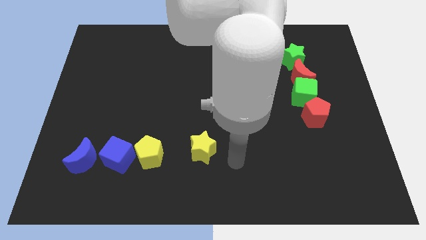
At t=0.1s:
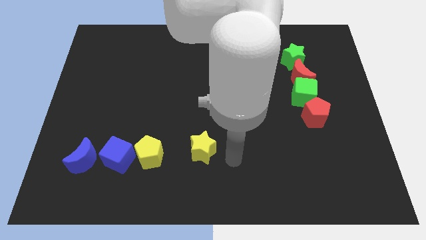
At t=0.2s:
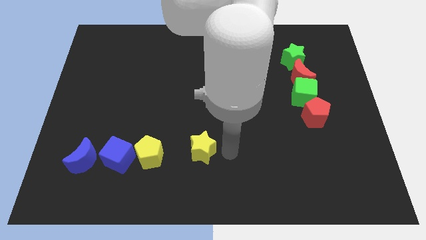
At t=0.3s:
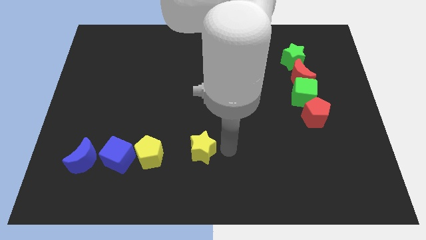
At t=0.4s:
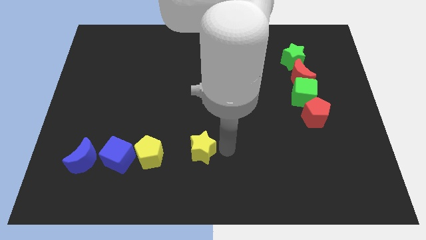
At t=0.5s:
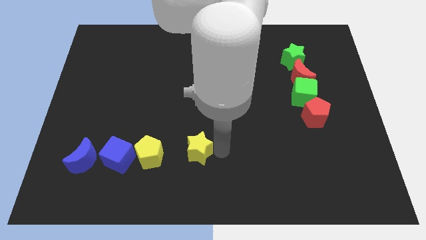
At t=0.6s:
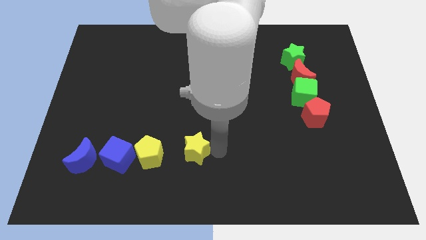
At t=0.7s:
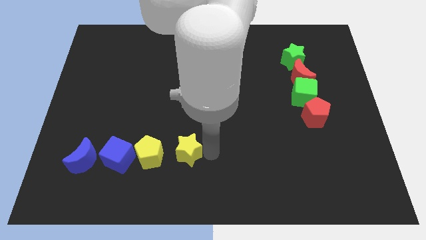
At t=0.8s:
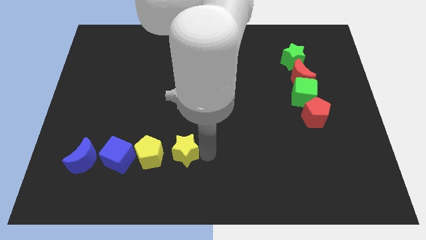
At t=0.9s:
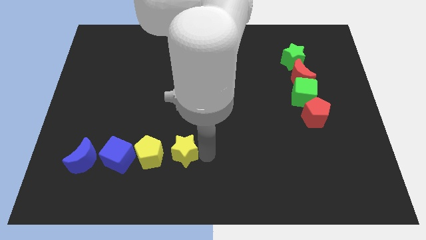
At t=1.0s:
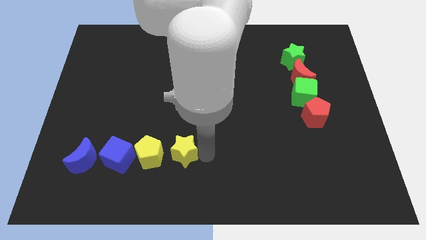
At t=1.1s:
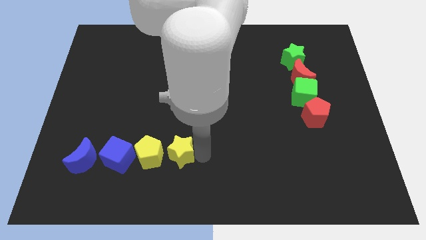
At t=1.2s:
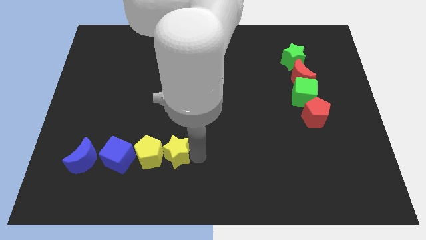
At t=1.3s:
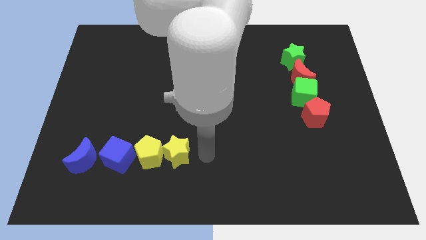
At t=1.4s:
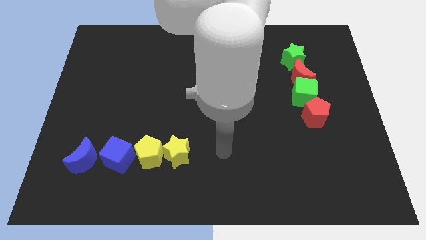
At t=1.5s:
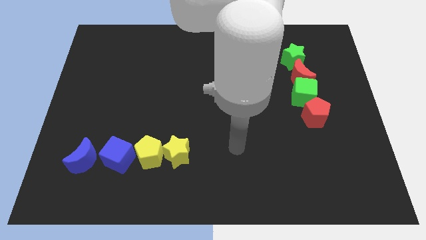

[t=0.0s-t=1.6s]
push the yellow star into the yellow pentagon

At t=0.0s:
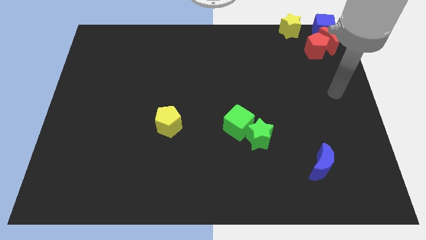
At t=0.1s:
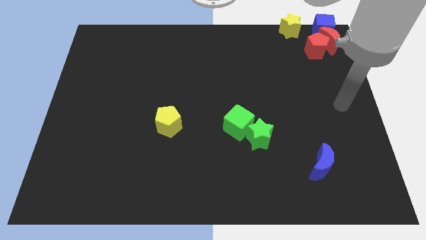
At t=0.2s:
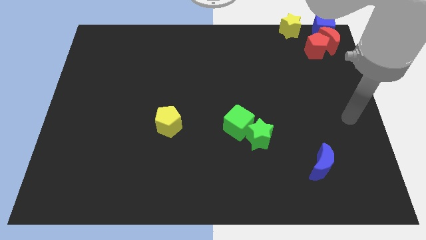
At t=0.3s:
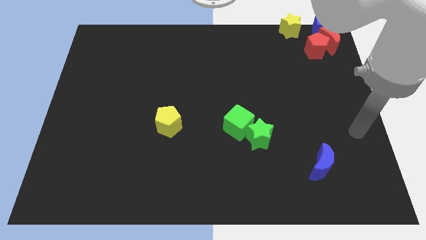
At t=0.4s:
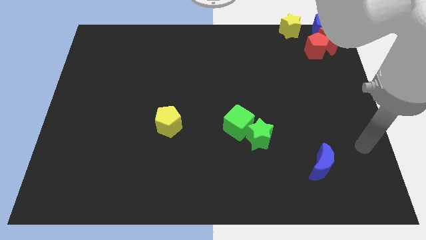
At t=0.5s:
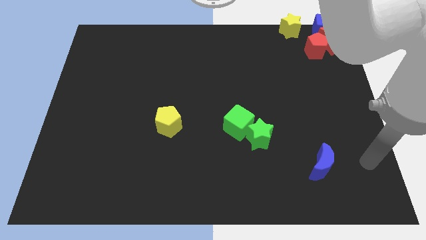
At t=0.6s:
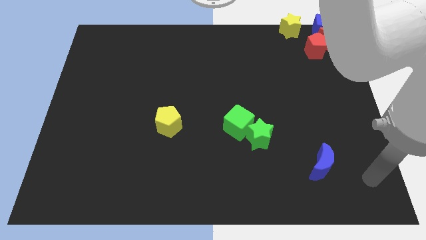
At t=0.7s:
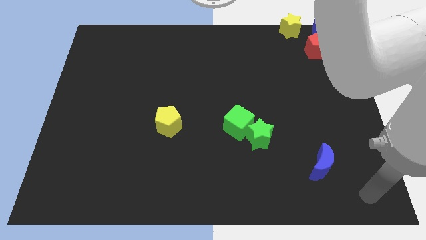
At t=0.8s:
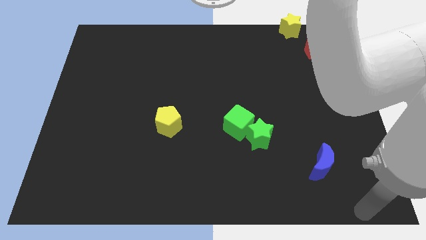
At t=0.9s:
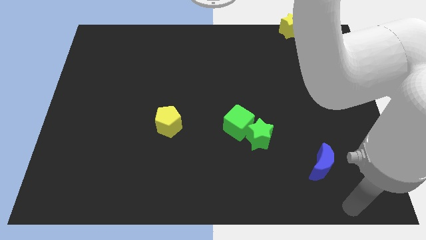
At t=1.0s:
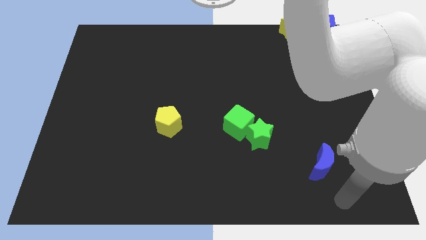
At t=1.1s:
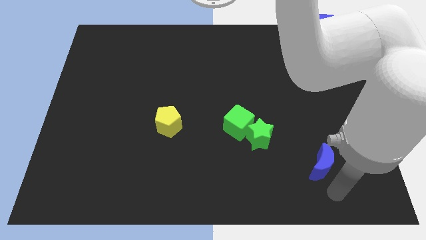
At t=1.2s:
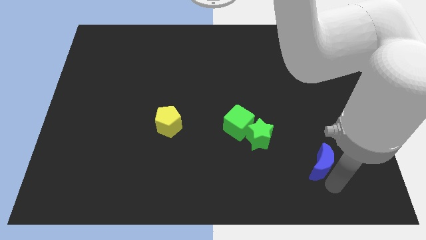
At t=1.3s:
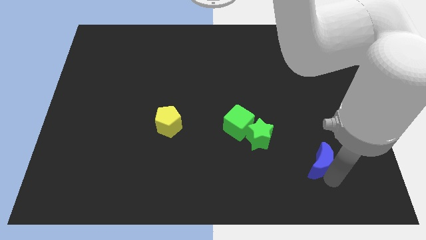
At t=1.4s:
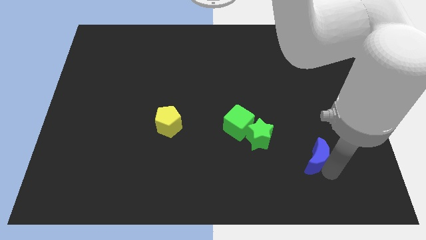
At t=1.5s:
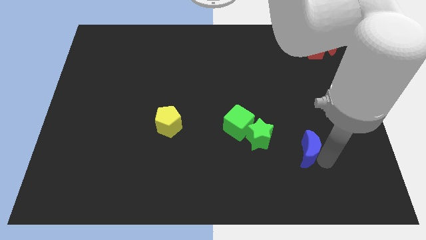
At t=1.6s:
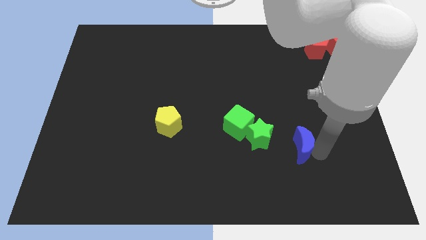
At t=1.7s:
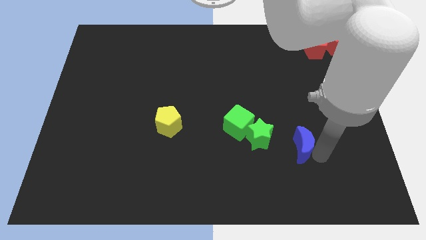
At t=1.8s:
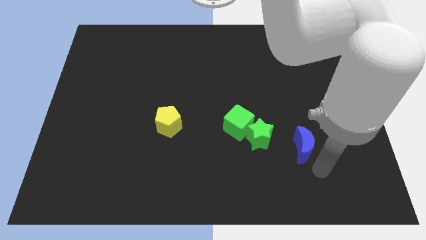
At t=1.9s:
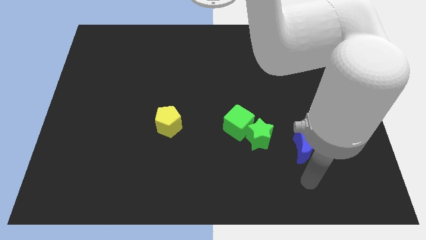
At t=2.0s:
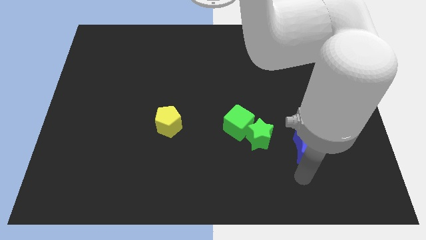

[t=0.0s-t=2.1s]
push the blue moon to the bottom right of green star

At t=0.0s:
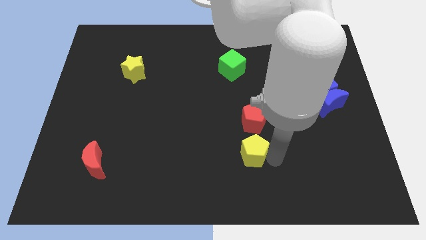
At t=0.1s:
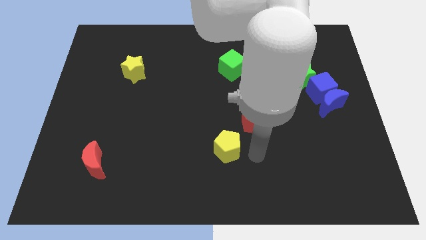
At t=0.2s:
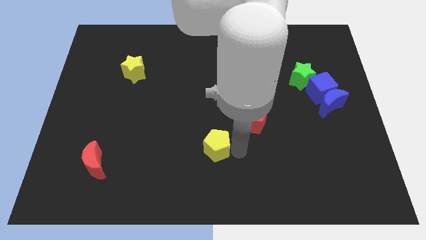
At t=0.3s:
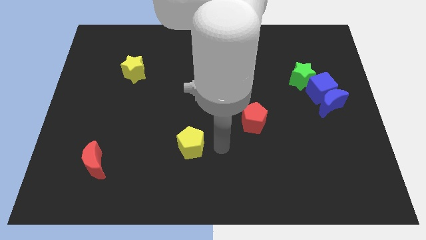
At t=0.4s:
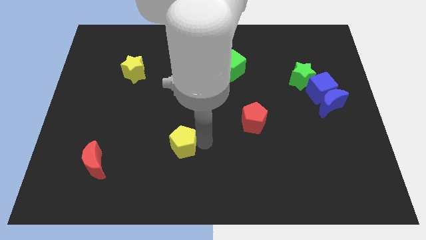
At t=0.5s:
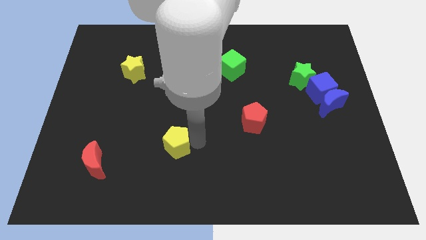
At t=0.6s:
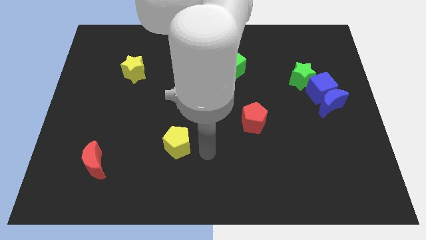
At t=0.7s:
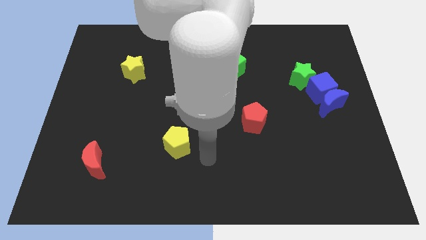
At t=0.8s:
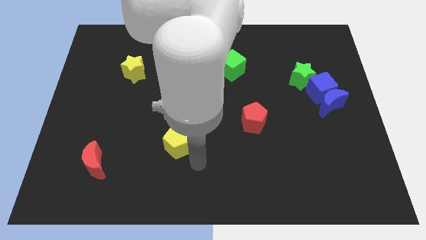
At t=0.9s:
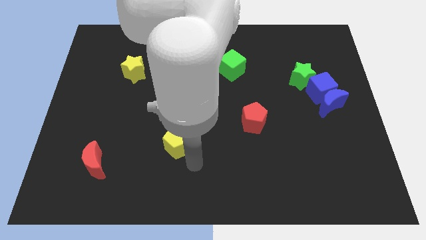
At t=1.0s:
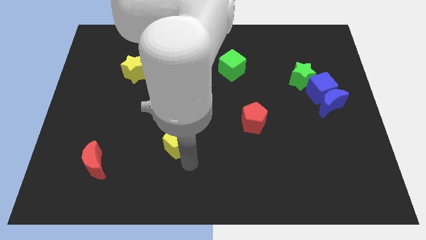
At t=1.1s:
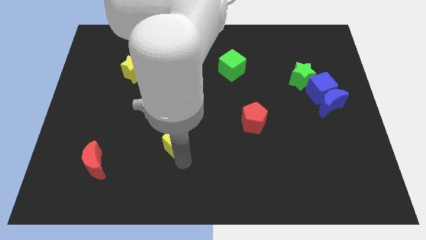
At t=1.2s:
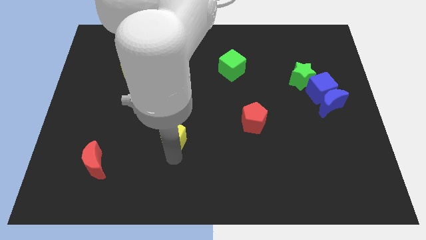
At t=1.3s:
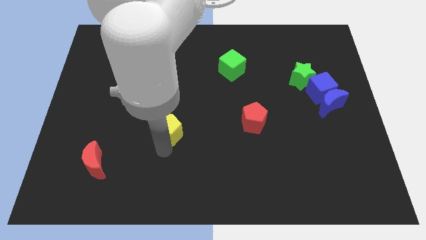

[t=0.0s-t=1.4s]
put the yellow pentagon diagonally in between the red blocks

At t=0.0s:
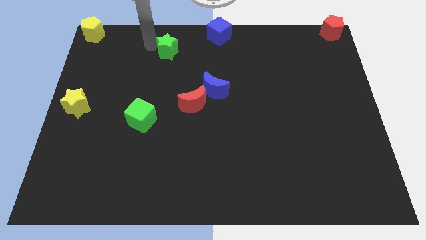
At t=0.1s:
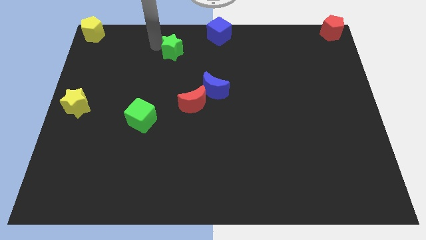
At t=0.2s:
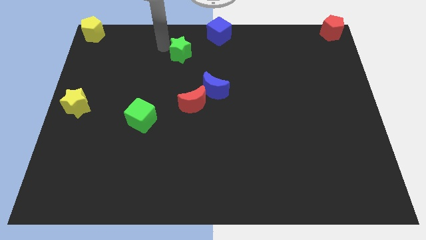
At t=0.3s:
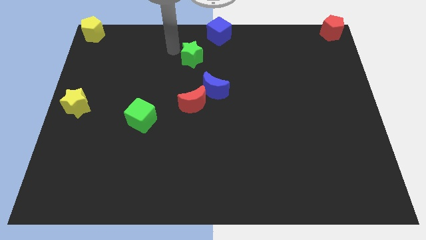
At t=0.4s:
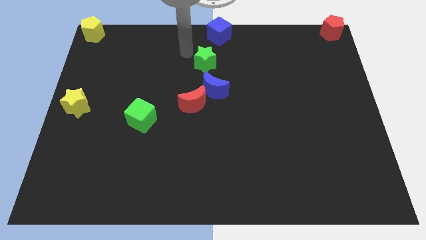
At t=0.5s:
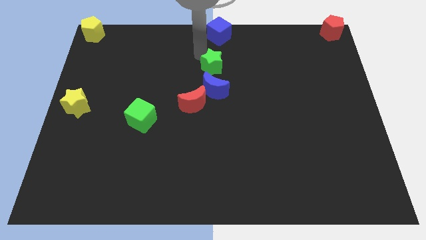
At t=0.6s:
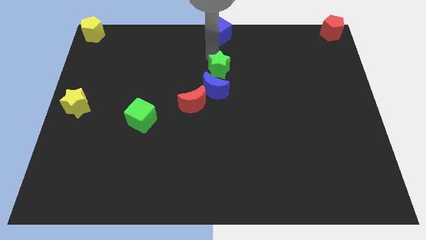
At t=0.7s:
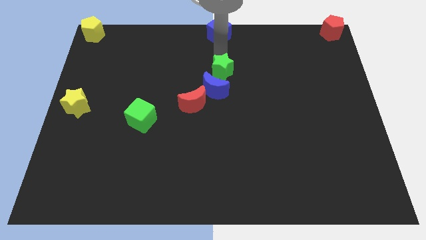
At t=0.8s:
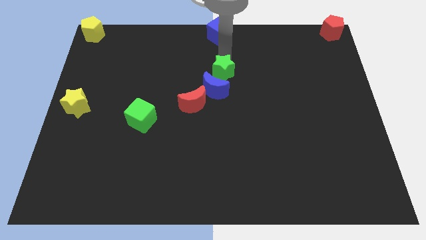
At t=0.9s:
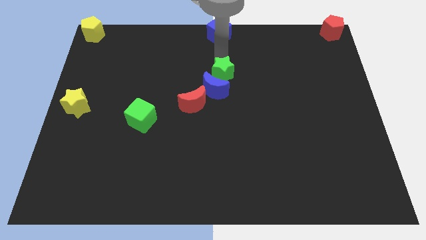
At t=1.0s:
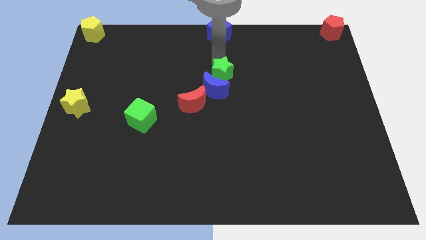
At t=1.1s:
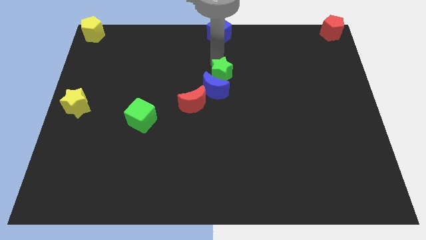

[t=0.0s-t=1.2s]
push the green star into the blue crescent from the top

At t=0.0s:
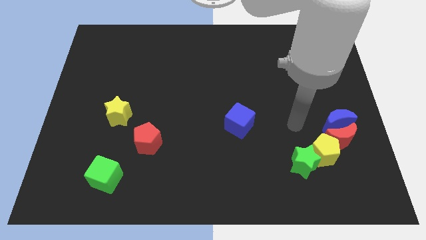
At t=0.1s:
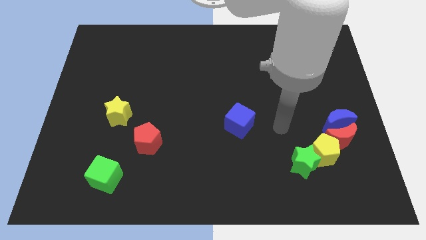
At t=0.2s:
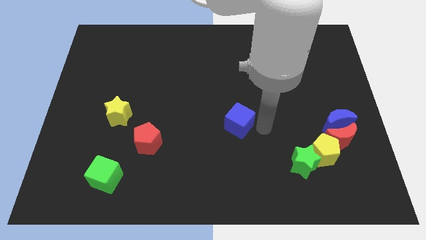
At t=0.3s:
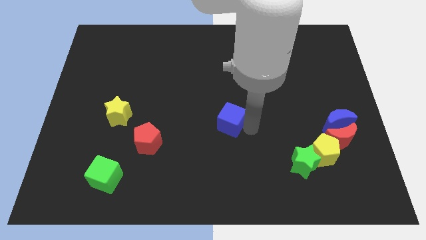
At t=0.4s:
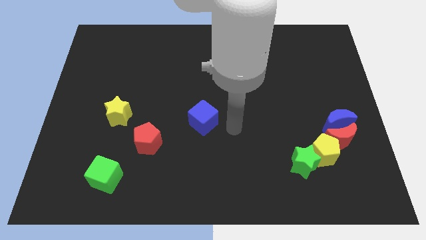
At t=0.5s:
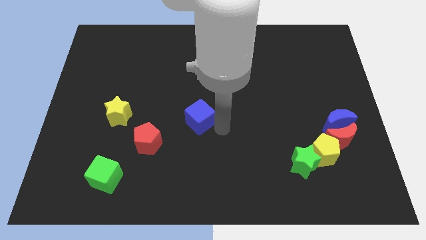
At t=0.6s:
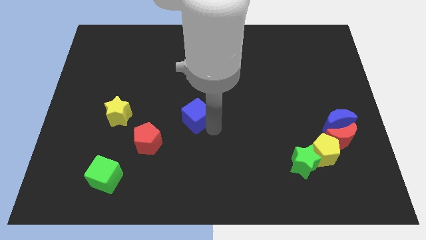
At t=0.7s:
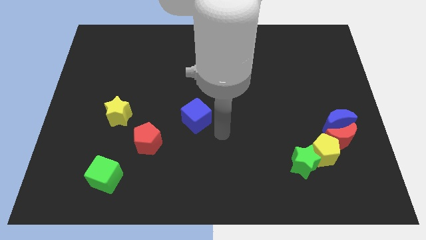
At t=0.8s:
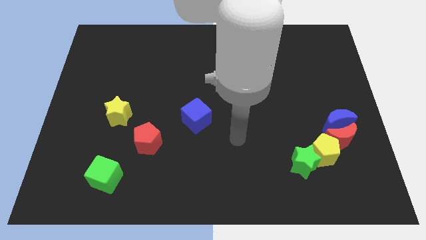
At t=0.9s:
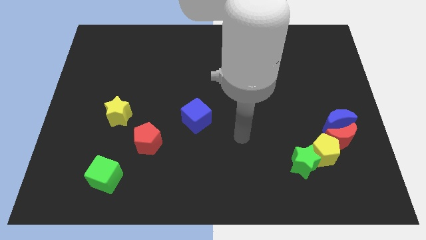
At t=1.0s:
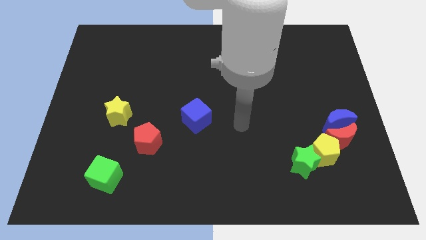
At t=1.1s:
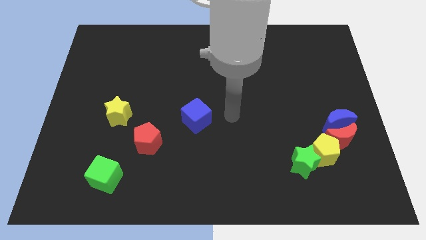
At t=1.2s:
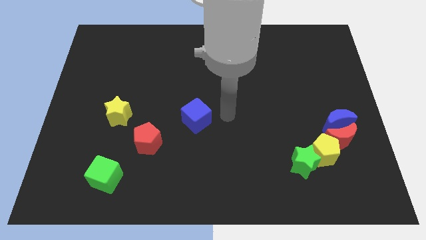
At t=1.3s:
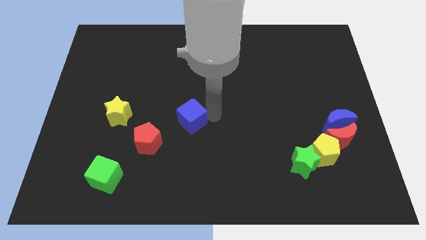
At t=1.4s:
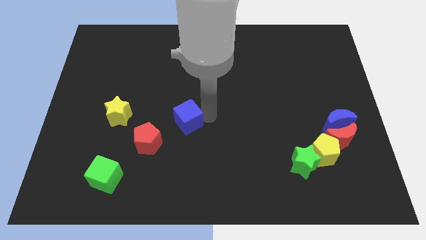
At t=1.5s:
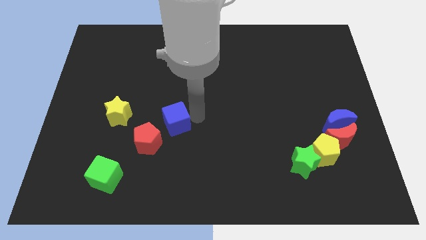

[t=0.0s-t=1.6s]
push the blue cube slightly towards the red pentagon

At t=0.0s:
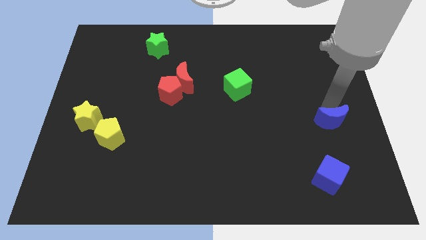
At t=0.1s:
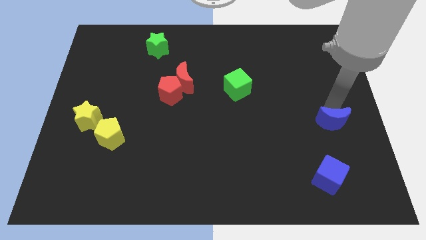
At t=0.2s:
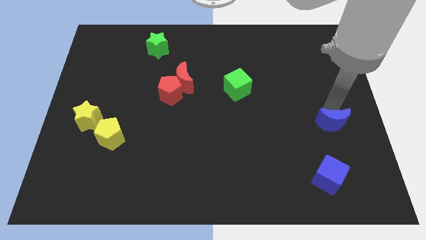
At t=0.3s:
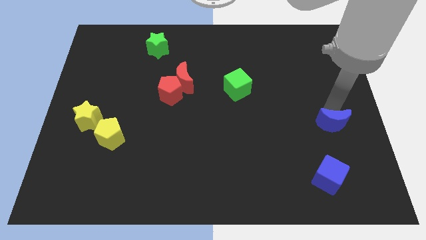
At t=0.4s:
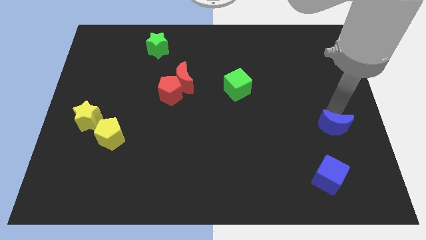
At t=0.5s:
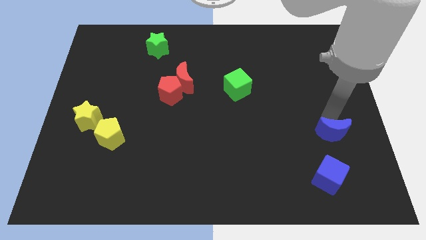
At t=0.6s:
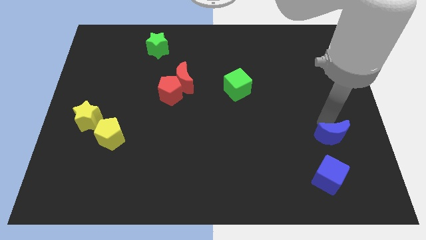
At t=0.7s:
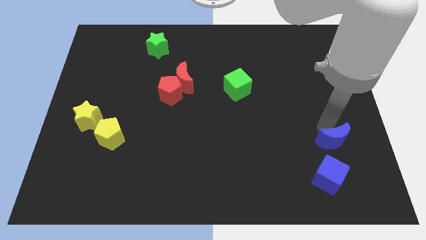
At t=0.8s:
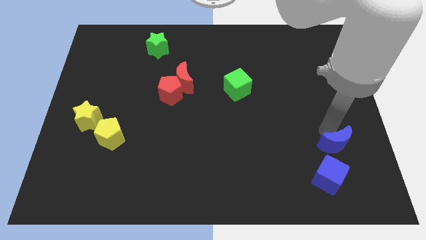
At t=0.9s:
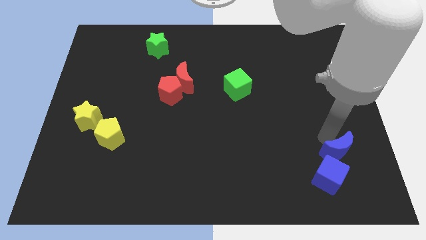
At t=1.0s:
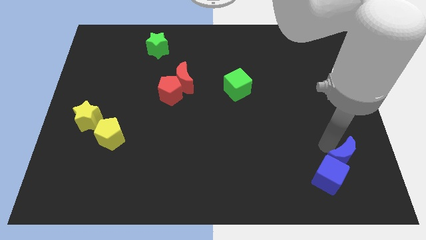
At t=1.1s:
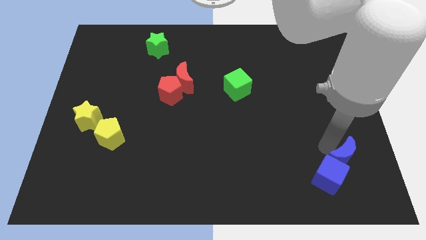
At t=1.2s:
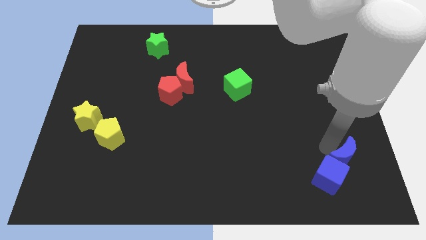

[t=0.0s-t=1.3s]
move the blue crescent into the top side of the blue cube
